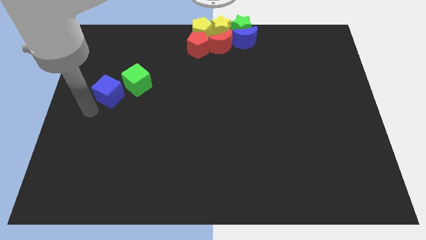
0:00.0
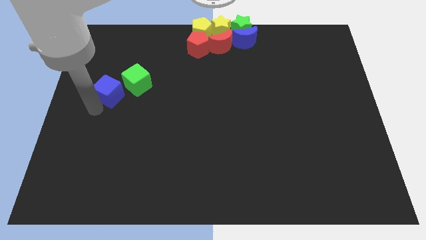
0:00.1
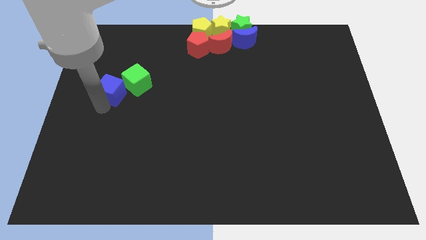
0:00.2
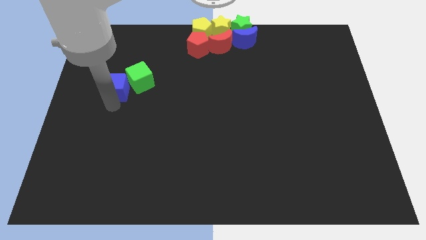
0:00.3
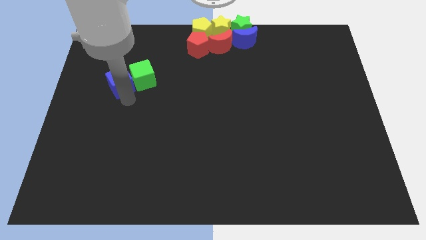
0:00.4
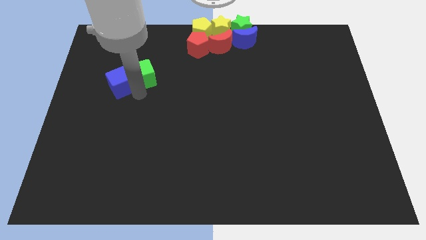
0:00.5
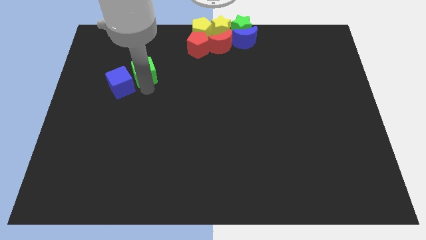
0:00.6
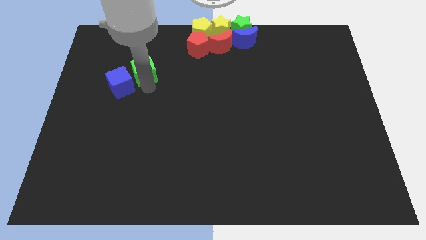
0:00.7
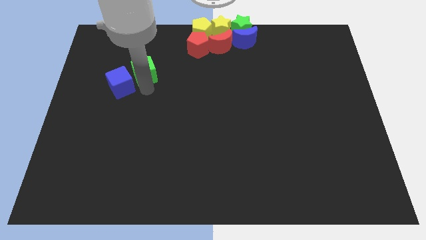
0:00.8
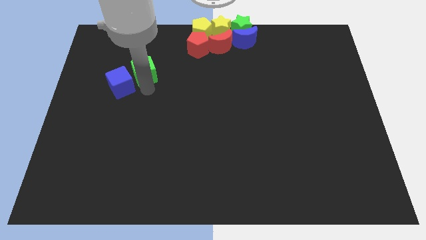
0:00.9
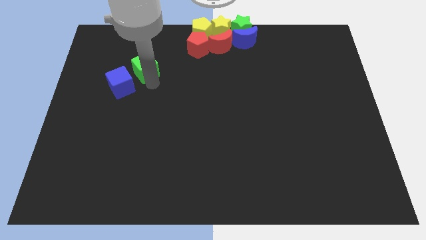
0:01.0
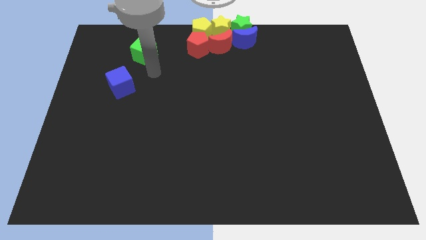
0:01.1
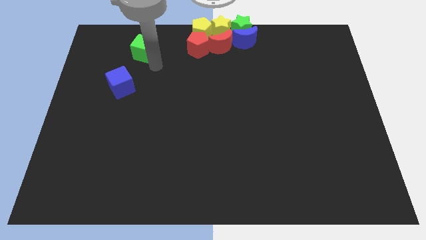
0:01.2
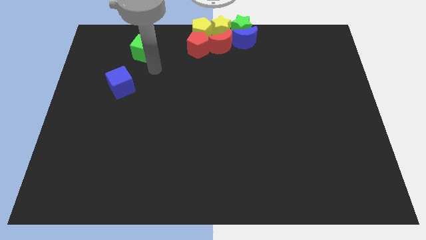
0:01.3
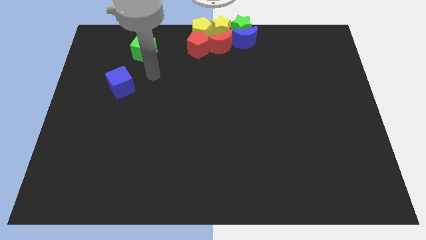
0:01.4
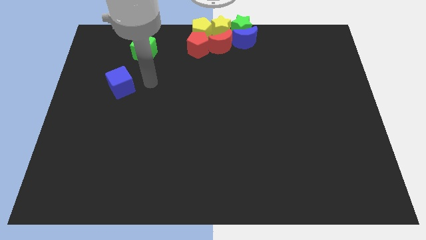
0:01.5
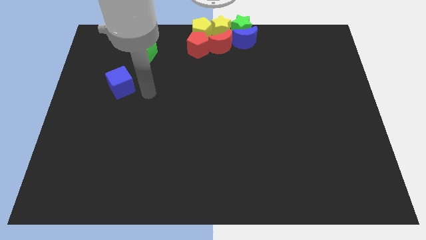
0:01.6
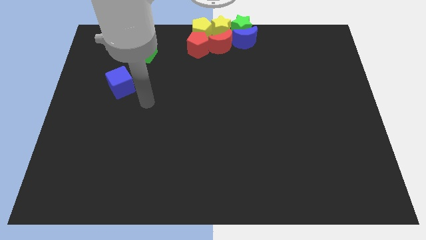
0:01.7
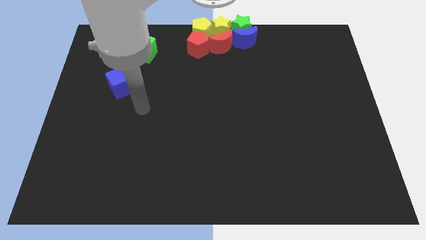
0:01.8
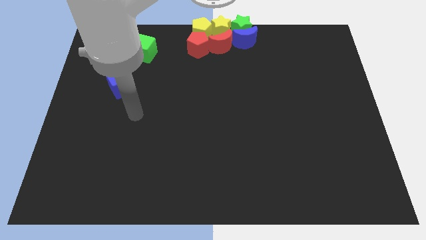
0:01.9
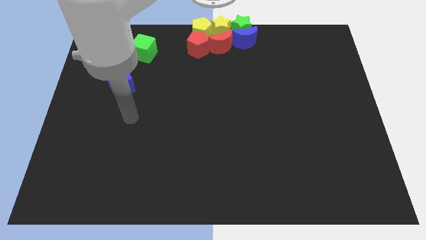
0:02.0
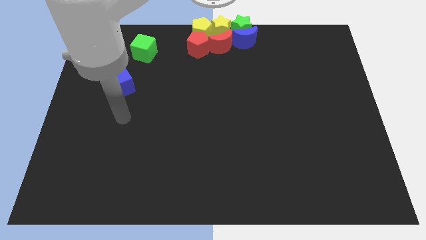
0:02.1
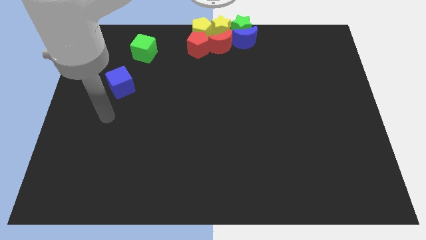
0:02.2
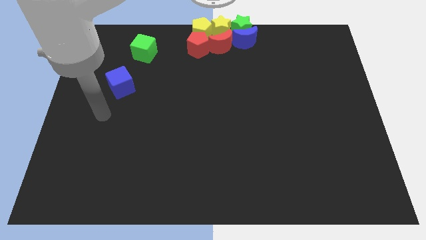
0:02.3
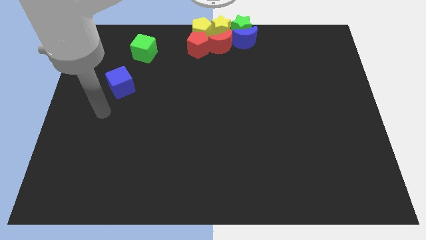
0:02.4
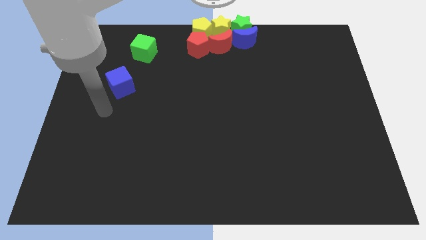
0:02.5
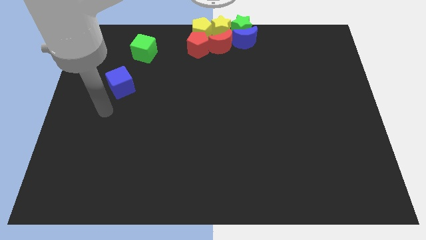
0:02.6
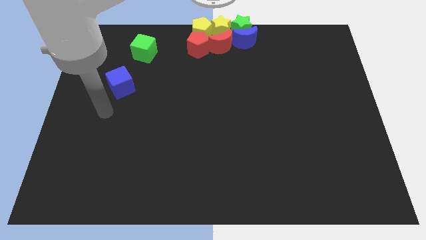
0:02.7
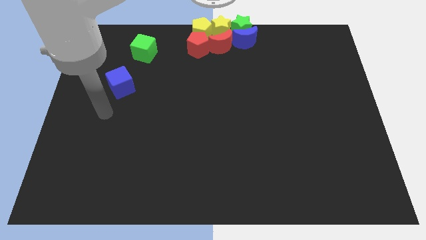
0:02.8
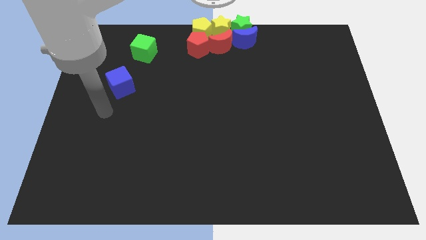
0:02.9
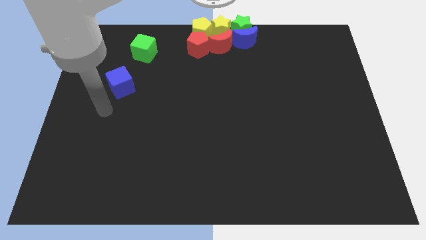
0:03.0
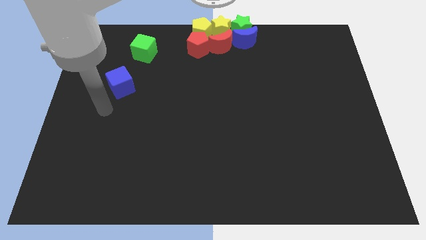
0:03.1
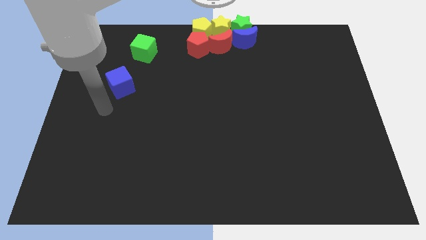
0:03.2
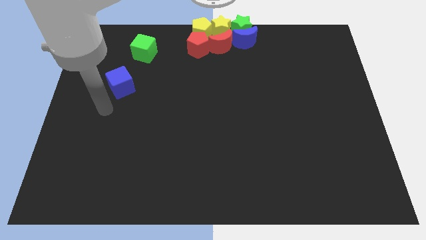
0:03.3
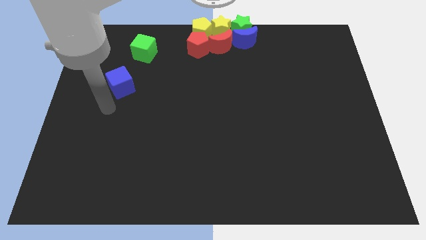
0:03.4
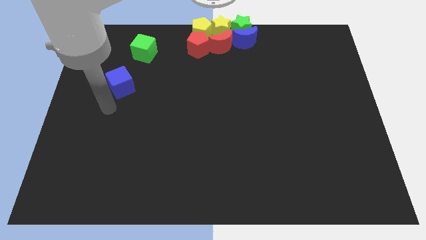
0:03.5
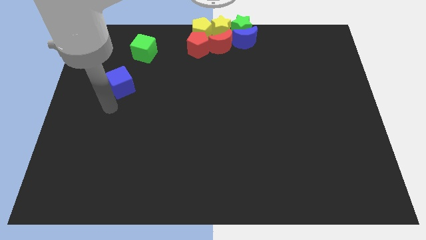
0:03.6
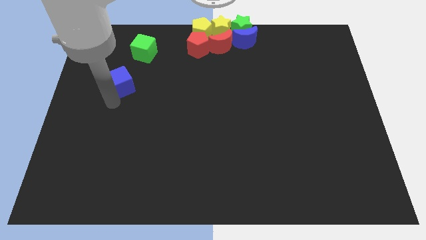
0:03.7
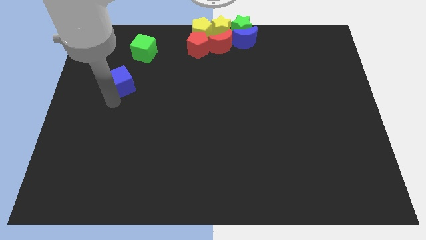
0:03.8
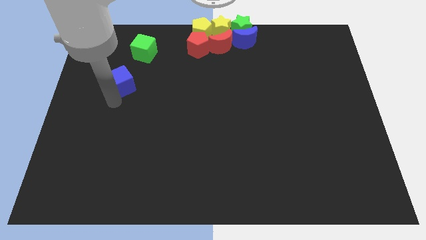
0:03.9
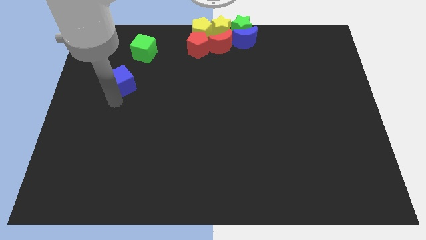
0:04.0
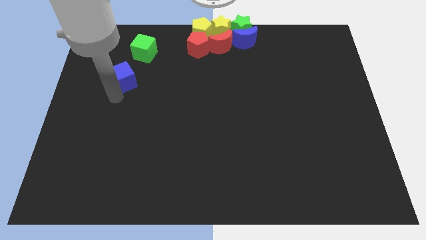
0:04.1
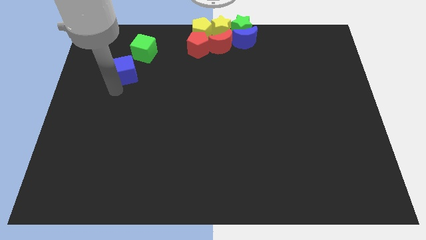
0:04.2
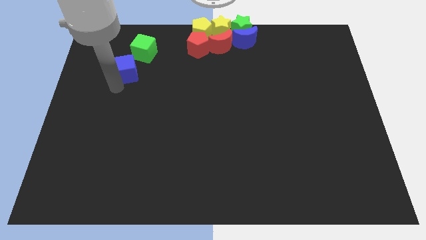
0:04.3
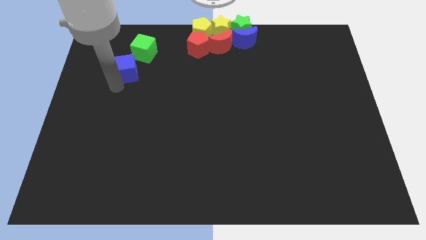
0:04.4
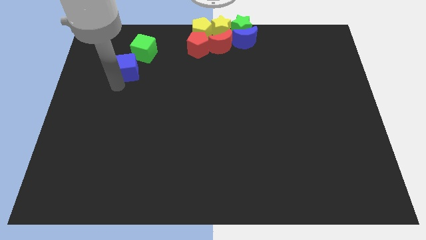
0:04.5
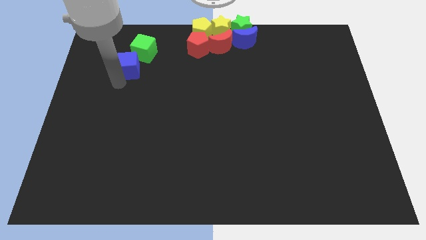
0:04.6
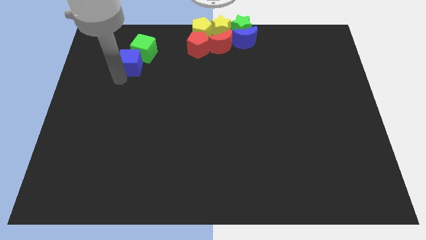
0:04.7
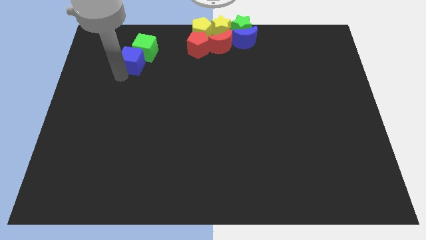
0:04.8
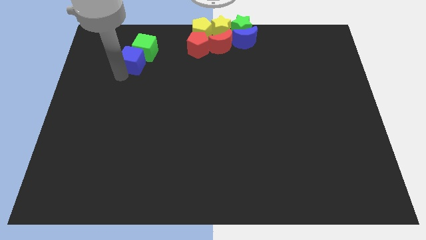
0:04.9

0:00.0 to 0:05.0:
move blue block along with green block towards the top center of the board

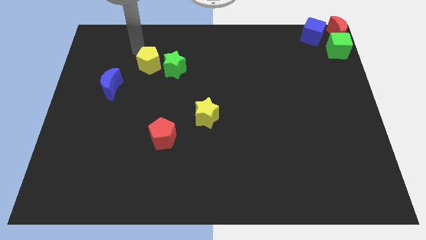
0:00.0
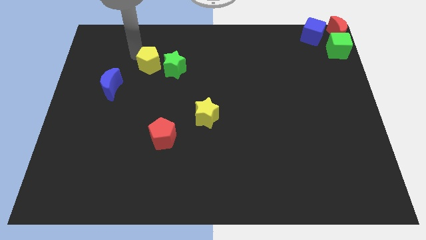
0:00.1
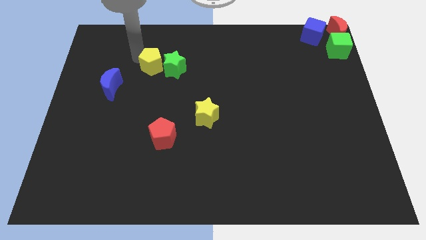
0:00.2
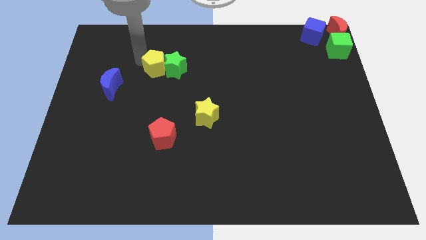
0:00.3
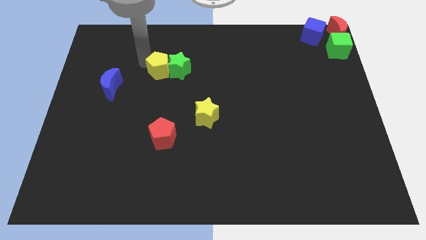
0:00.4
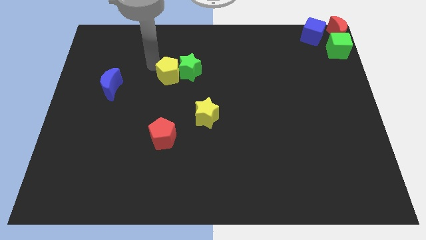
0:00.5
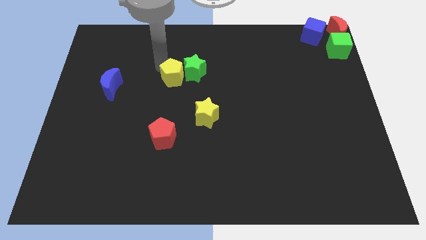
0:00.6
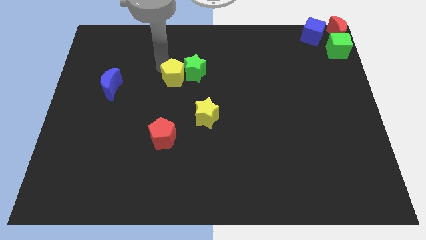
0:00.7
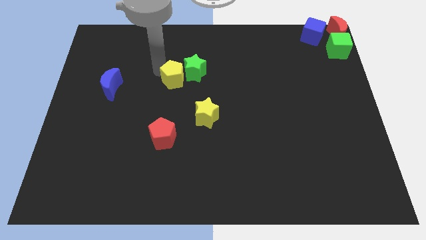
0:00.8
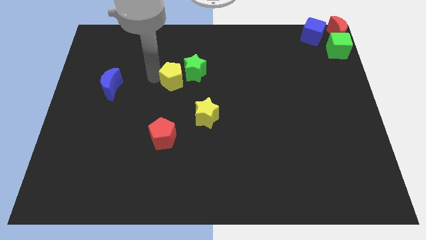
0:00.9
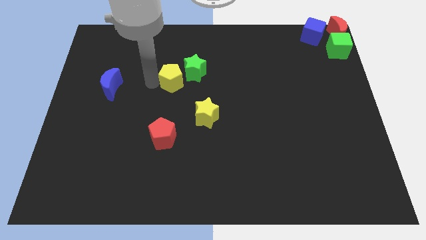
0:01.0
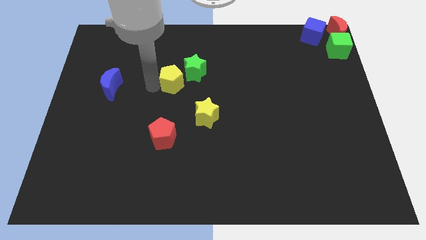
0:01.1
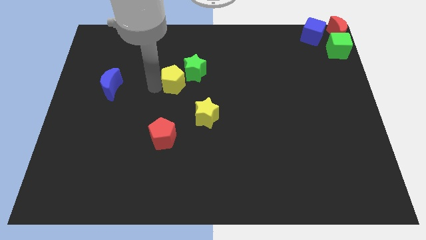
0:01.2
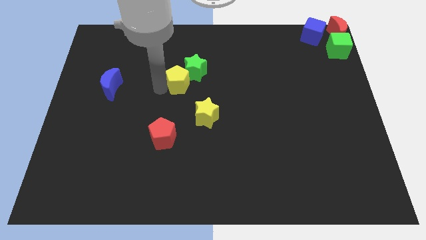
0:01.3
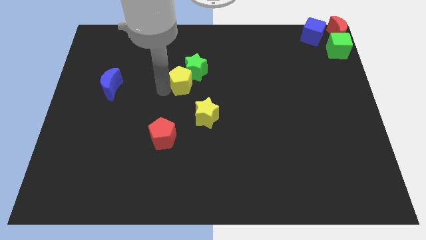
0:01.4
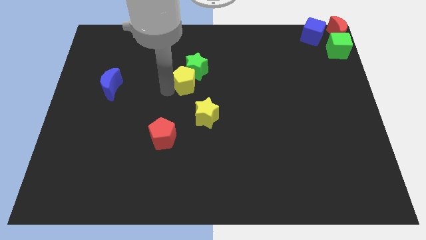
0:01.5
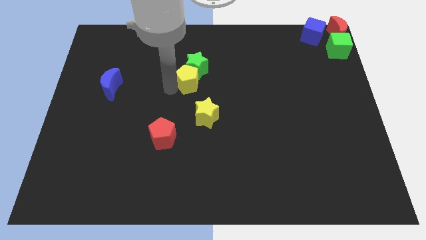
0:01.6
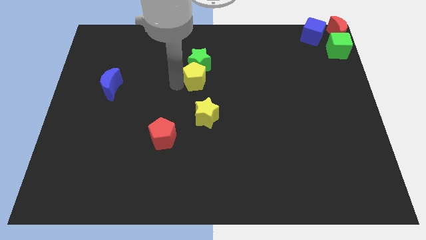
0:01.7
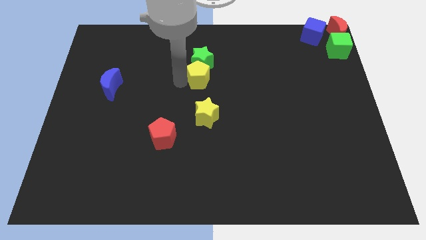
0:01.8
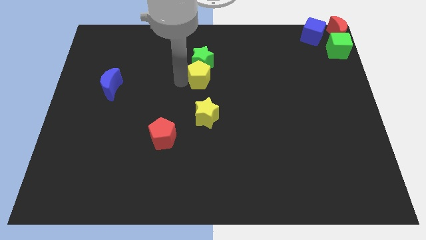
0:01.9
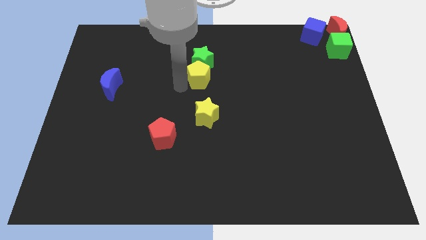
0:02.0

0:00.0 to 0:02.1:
place the yellow pentagon into the bottom of green star

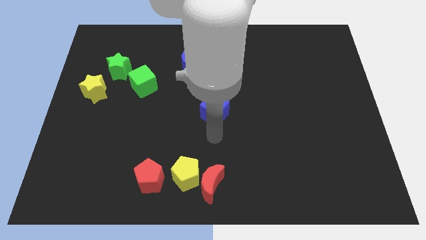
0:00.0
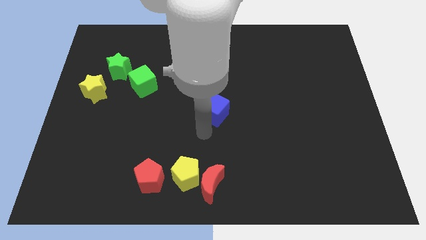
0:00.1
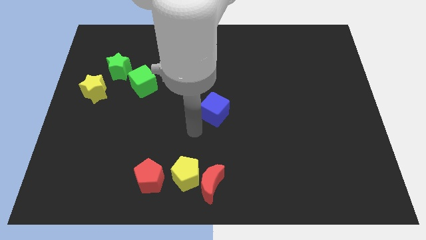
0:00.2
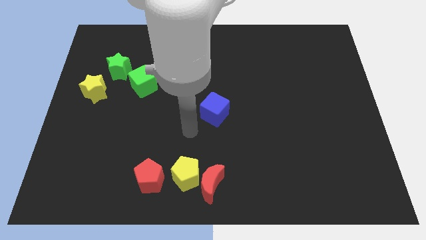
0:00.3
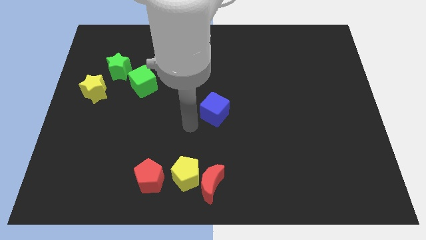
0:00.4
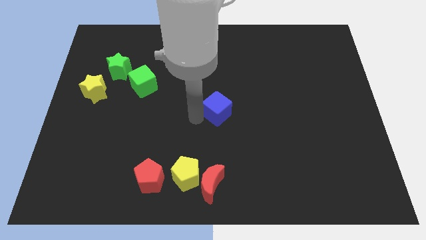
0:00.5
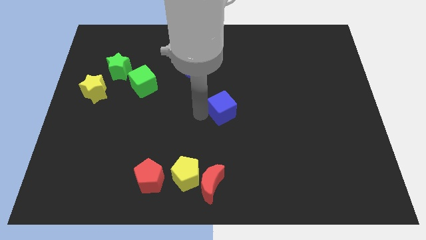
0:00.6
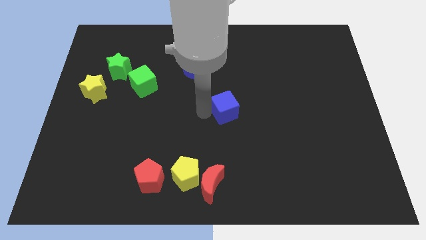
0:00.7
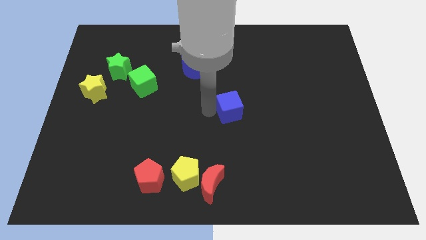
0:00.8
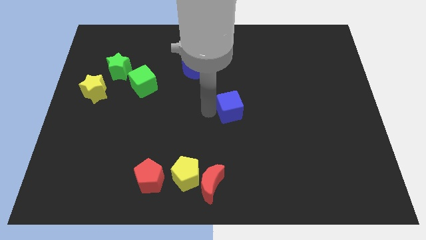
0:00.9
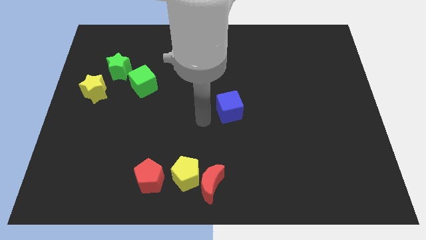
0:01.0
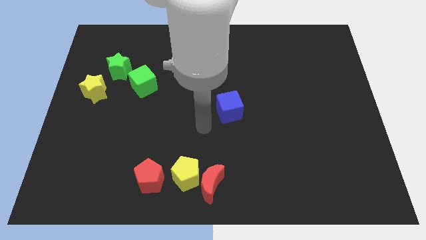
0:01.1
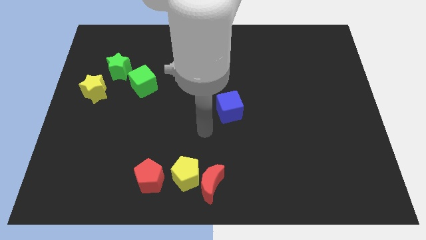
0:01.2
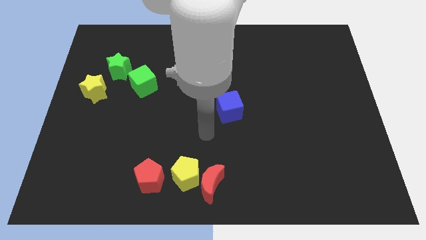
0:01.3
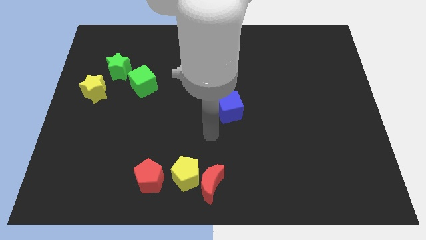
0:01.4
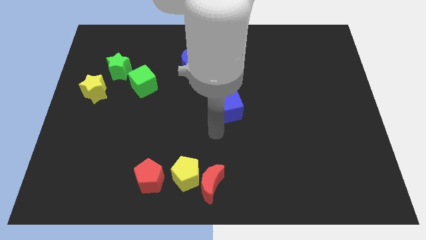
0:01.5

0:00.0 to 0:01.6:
place the blue cube at the center of the board

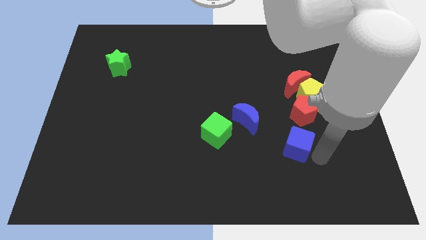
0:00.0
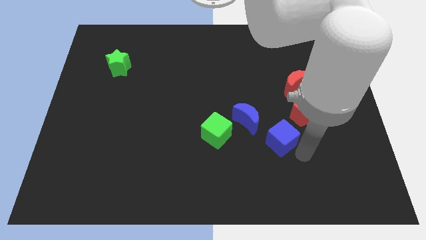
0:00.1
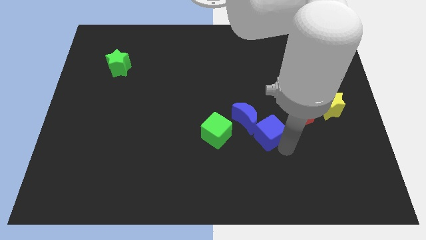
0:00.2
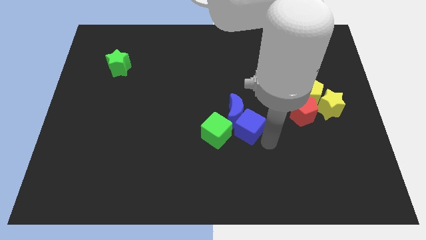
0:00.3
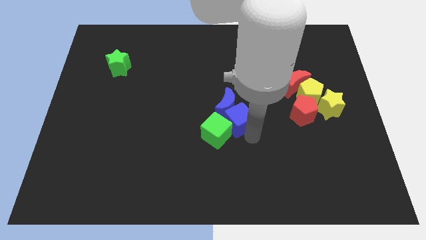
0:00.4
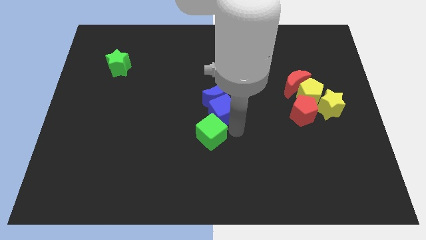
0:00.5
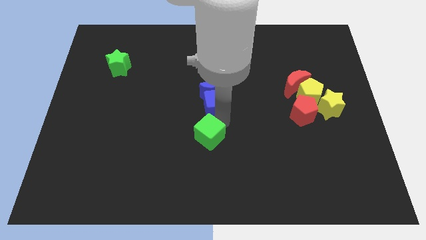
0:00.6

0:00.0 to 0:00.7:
move blue cube towards blue moon
